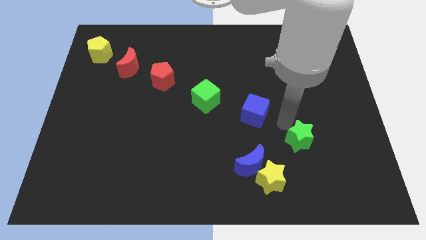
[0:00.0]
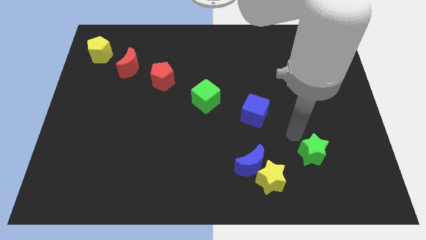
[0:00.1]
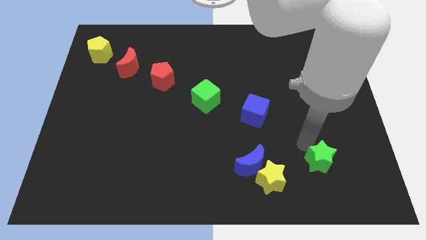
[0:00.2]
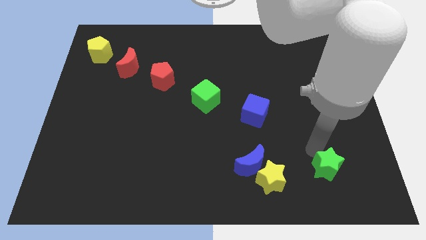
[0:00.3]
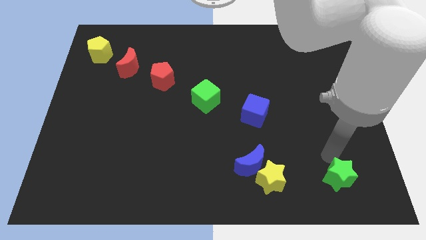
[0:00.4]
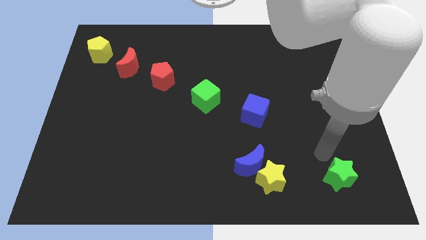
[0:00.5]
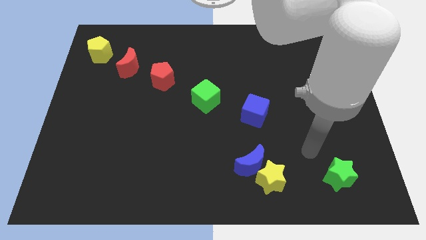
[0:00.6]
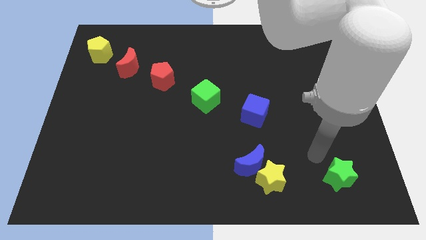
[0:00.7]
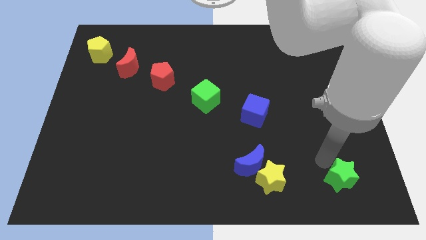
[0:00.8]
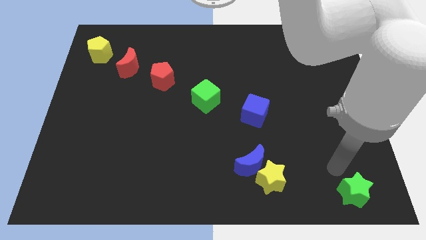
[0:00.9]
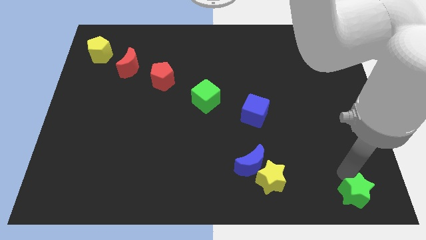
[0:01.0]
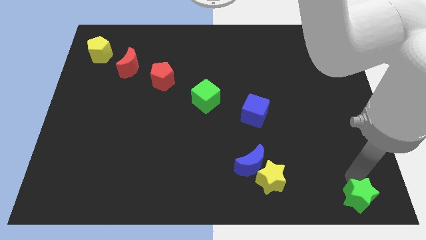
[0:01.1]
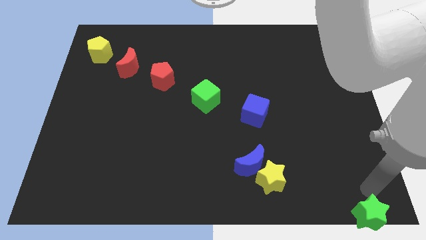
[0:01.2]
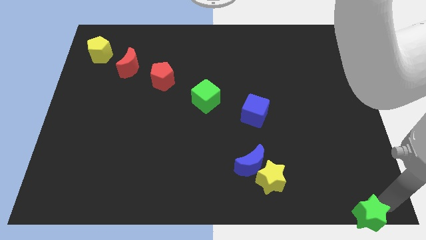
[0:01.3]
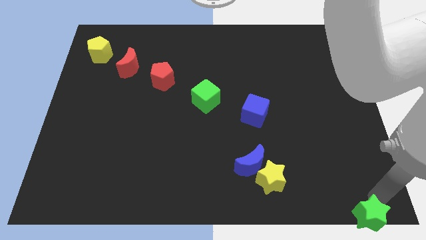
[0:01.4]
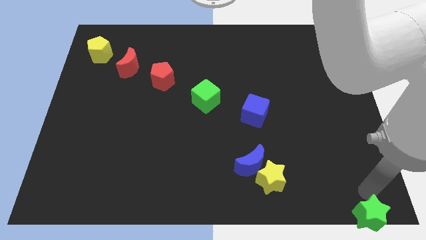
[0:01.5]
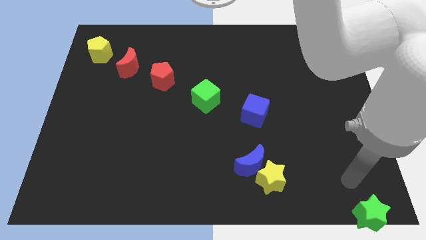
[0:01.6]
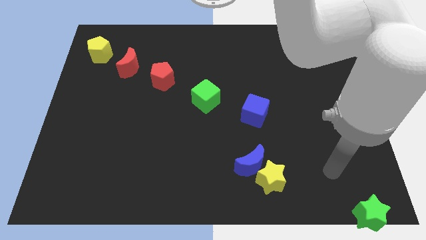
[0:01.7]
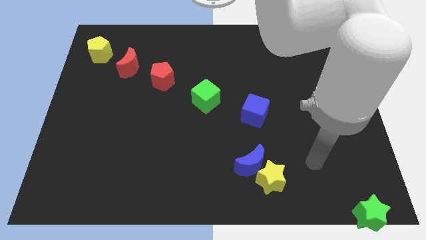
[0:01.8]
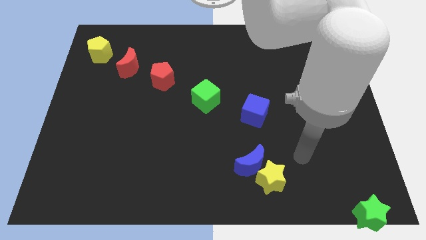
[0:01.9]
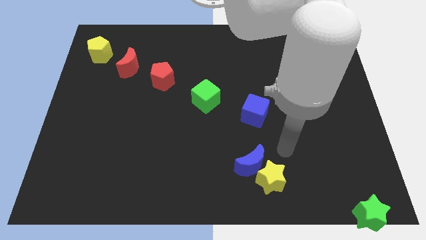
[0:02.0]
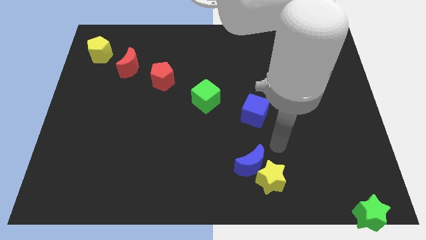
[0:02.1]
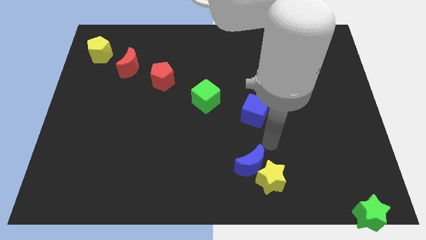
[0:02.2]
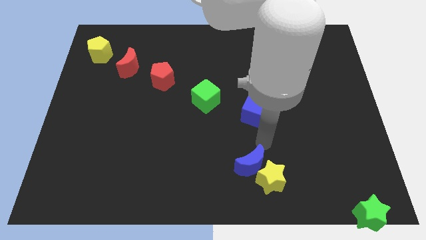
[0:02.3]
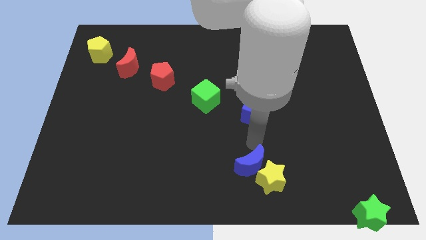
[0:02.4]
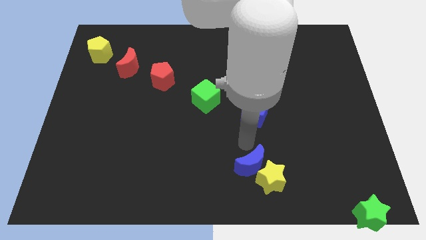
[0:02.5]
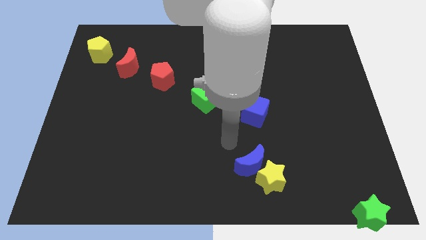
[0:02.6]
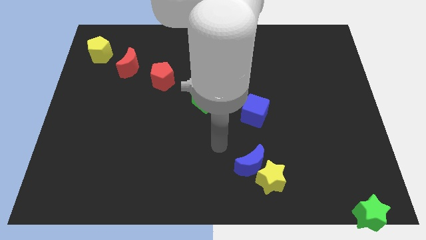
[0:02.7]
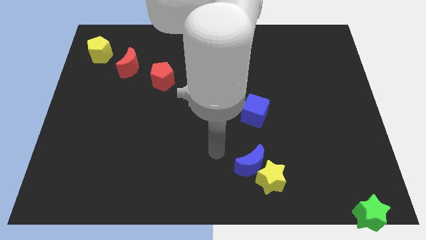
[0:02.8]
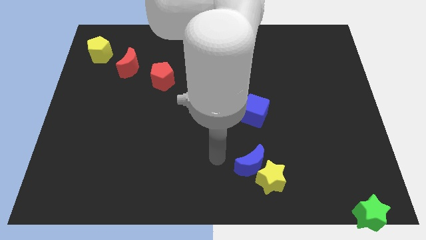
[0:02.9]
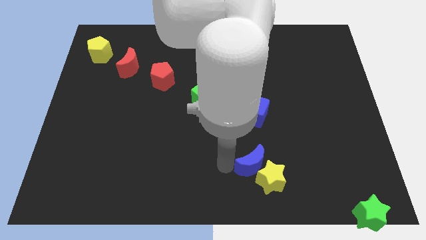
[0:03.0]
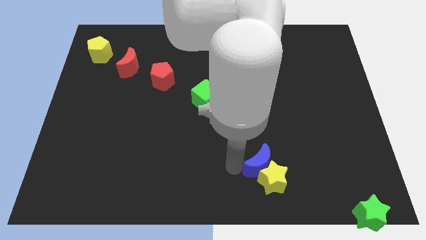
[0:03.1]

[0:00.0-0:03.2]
place the green star at the bottom right corner

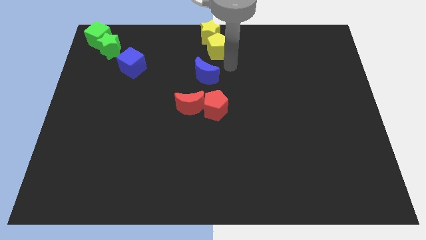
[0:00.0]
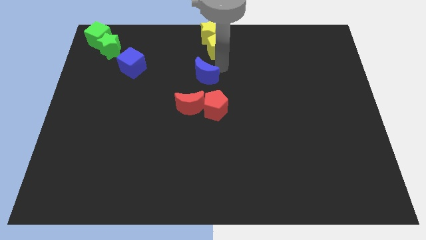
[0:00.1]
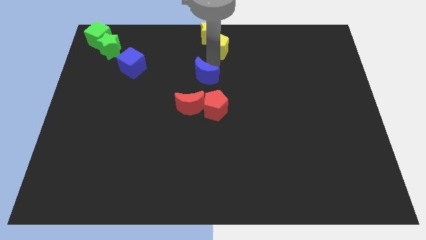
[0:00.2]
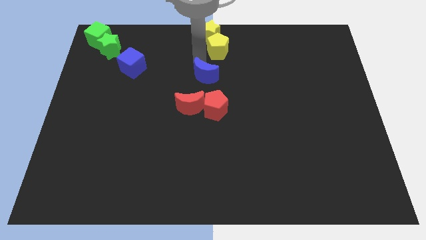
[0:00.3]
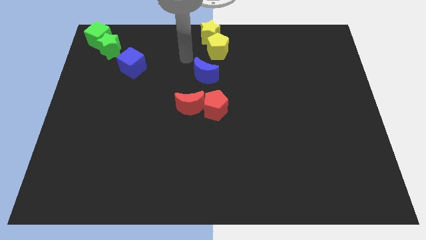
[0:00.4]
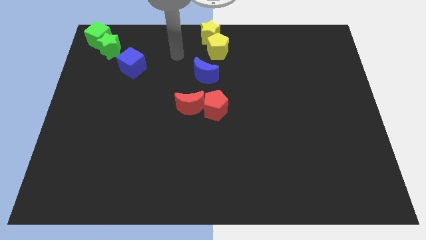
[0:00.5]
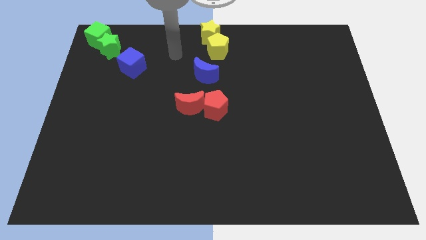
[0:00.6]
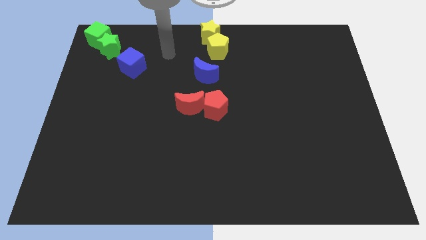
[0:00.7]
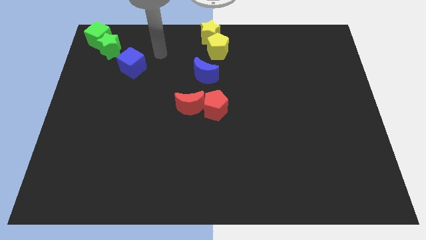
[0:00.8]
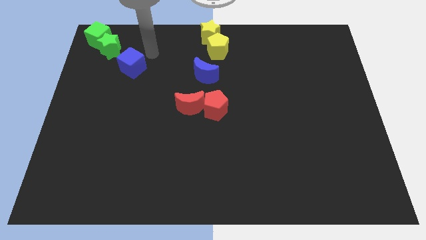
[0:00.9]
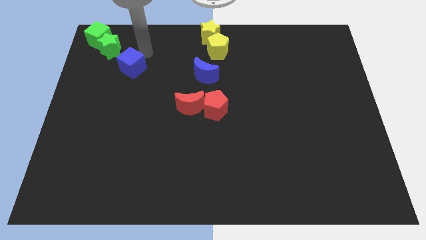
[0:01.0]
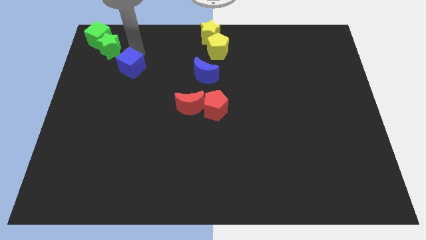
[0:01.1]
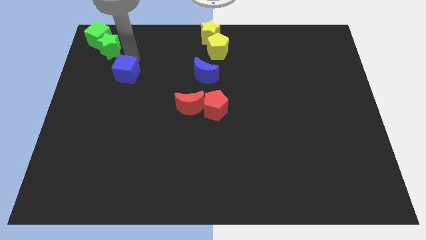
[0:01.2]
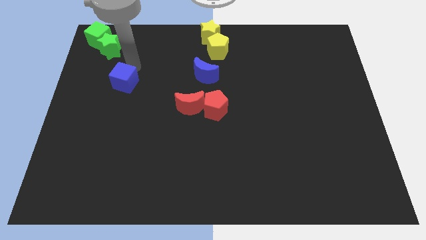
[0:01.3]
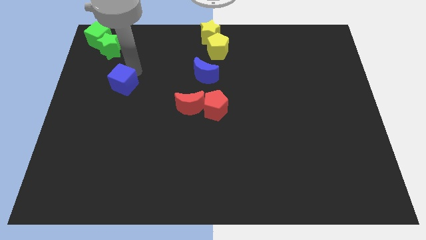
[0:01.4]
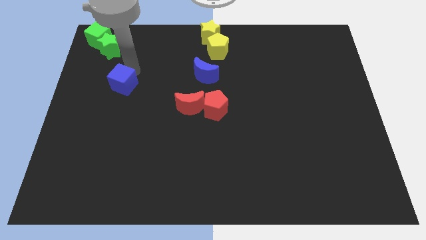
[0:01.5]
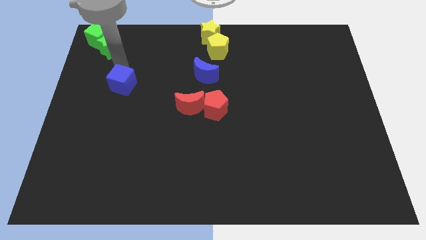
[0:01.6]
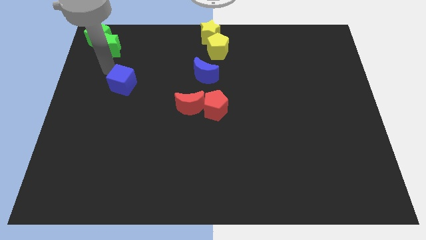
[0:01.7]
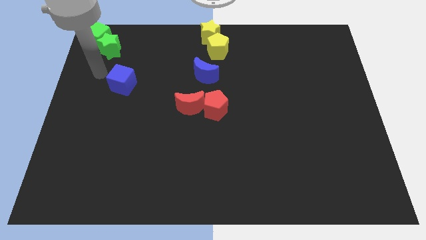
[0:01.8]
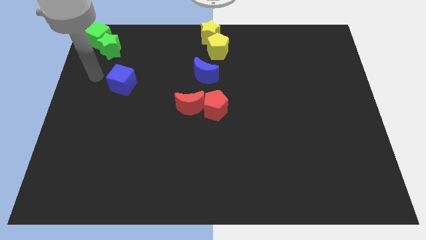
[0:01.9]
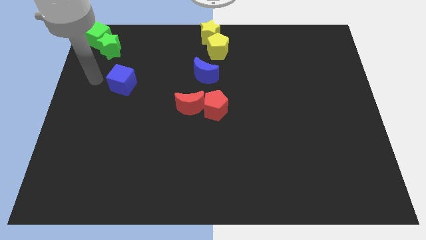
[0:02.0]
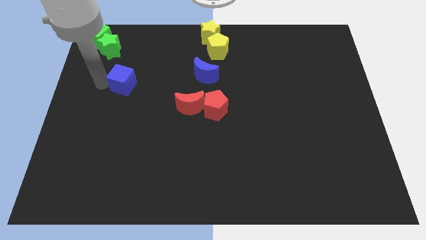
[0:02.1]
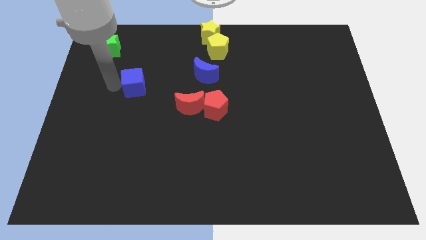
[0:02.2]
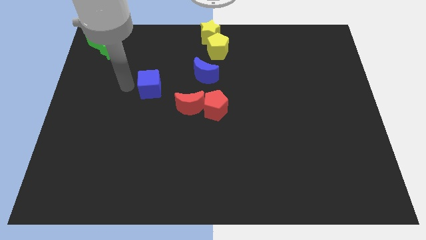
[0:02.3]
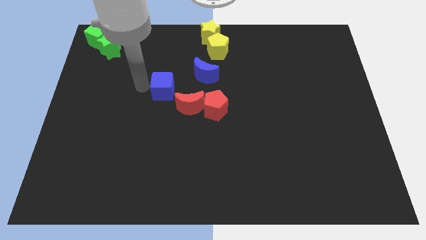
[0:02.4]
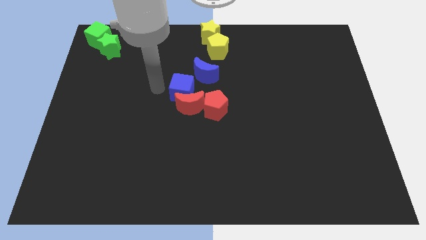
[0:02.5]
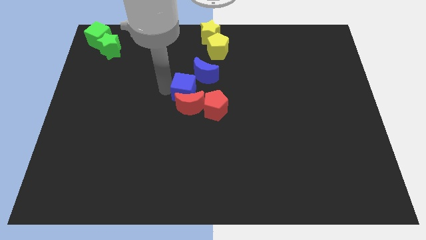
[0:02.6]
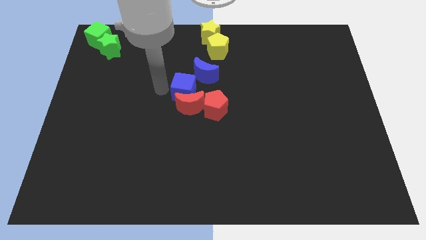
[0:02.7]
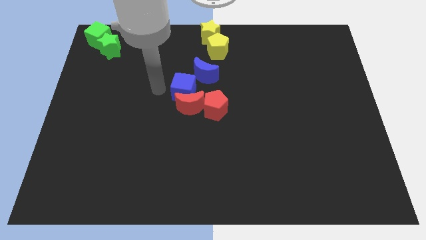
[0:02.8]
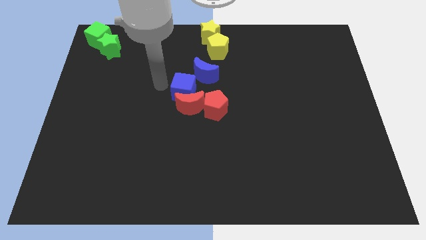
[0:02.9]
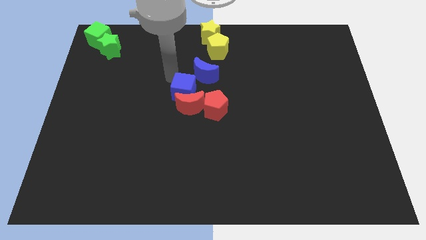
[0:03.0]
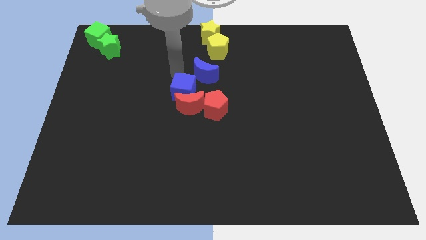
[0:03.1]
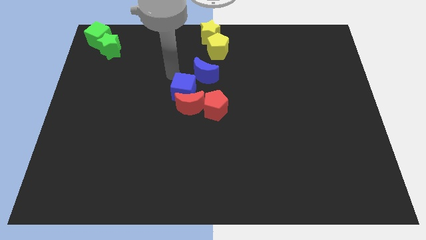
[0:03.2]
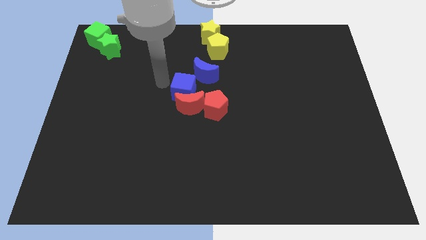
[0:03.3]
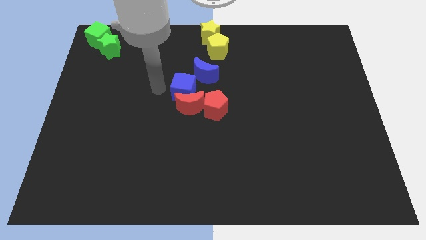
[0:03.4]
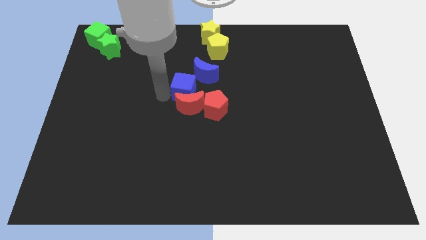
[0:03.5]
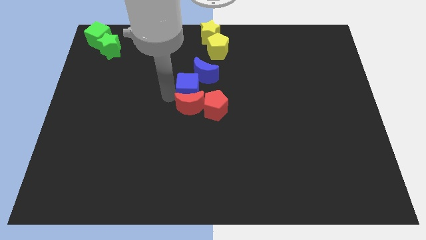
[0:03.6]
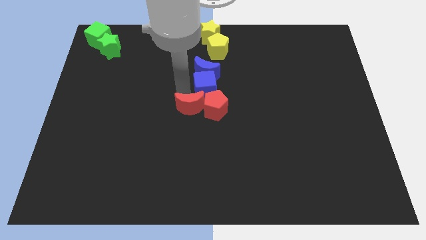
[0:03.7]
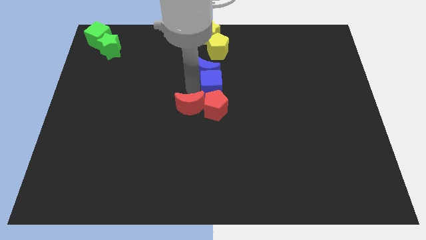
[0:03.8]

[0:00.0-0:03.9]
make the blue cube to touch the blue crescent

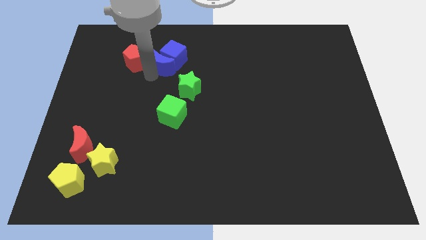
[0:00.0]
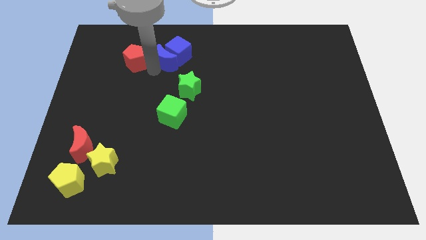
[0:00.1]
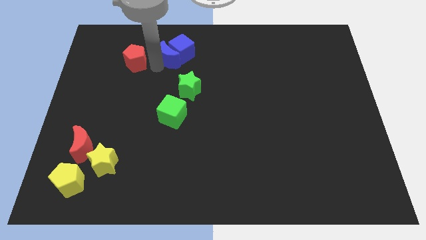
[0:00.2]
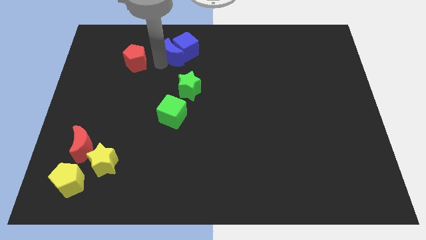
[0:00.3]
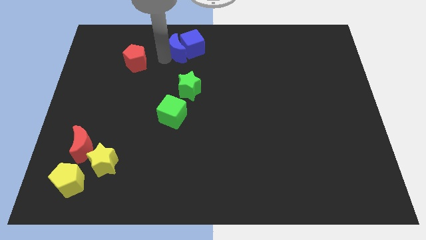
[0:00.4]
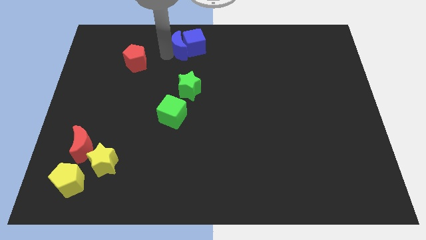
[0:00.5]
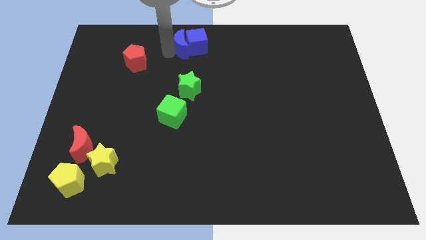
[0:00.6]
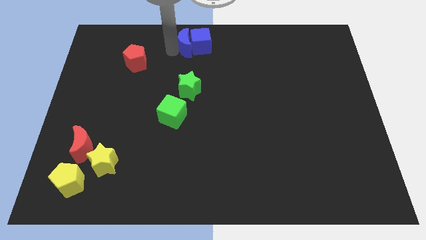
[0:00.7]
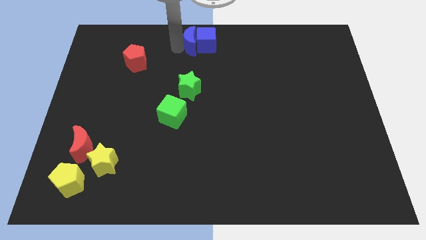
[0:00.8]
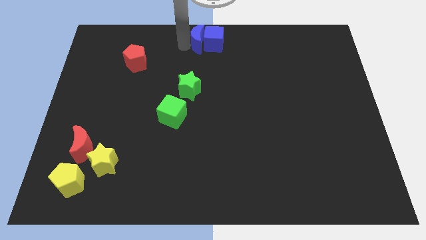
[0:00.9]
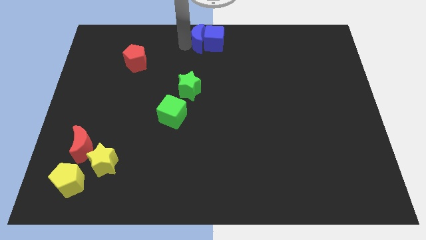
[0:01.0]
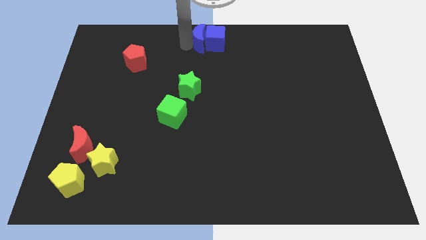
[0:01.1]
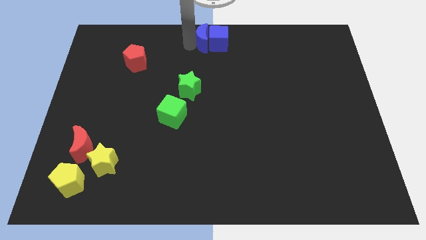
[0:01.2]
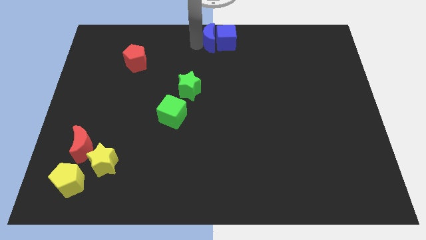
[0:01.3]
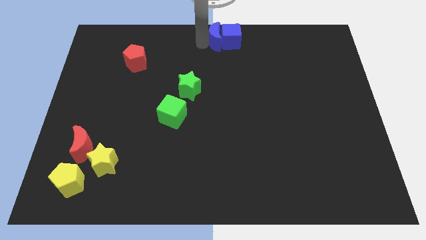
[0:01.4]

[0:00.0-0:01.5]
push the blue crescent and blue cube to the top center

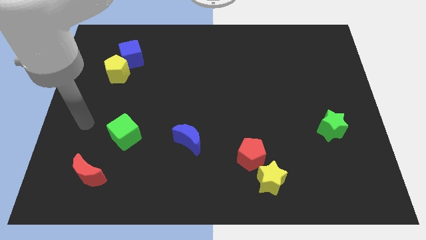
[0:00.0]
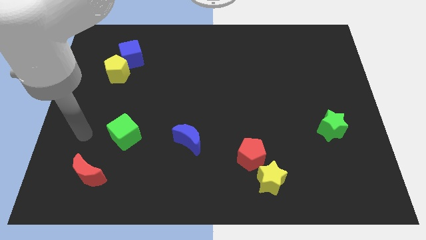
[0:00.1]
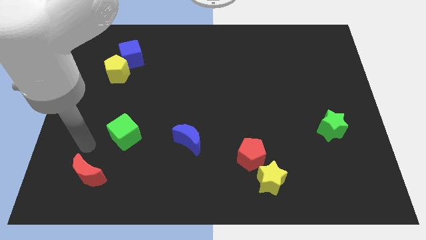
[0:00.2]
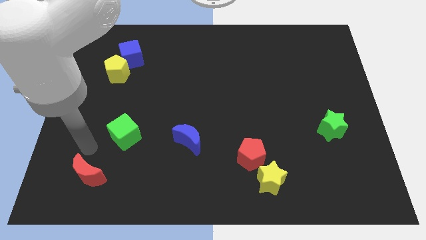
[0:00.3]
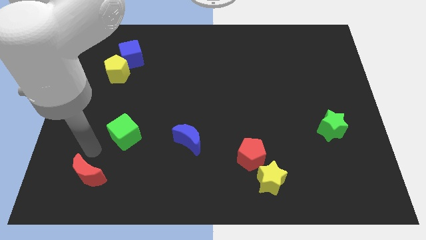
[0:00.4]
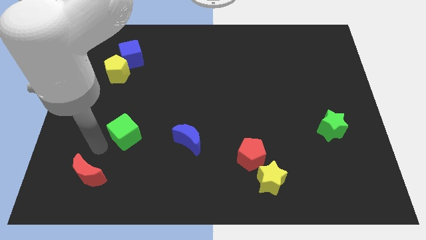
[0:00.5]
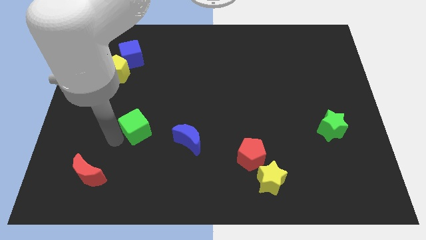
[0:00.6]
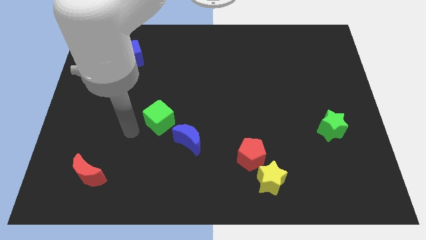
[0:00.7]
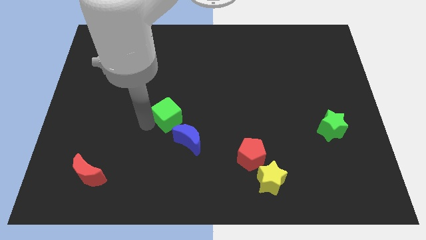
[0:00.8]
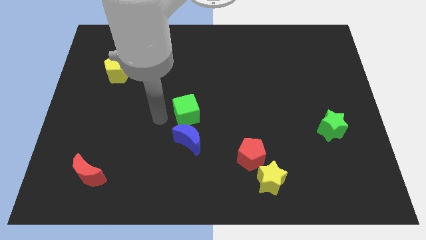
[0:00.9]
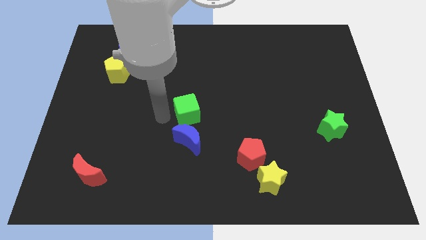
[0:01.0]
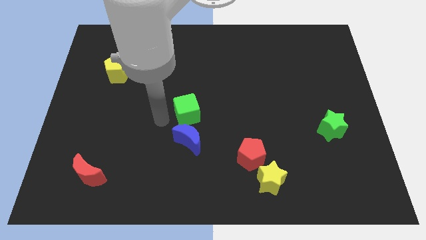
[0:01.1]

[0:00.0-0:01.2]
move the green cube to the top side of the blue crescent
